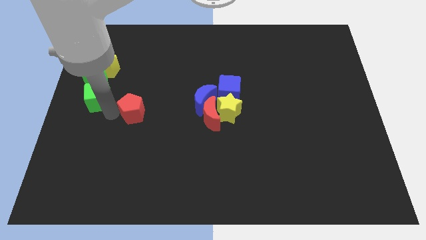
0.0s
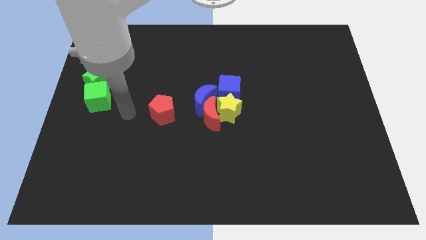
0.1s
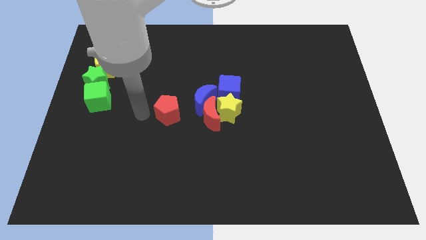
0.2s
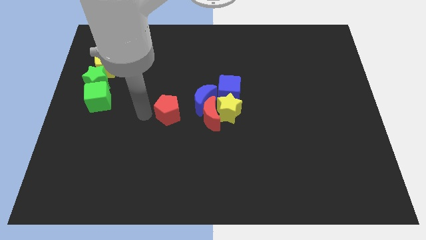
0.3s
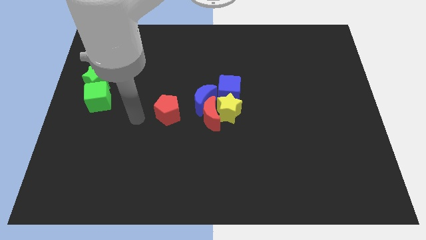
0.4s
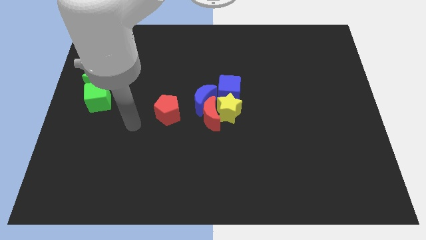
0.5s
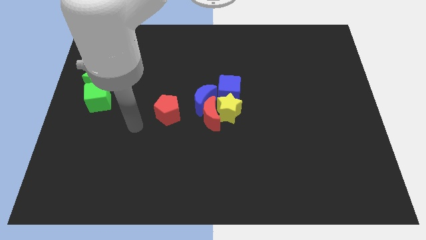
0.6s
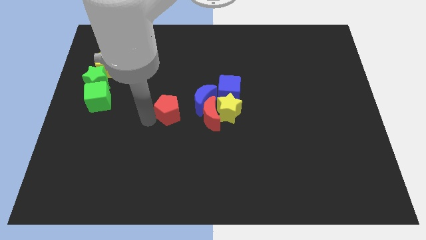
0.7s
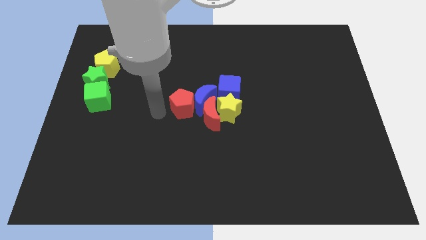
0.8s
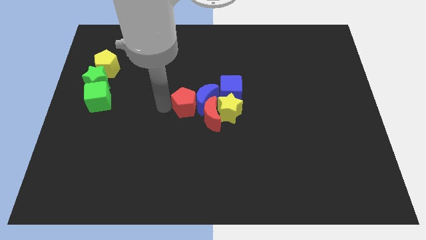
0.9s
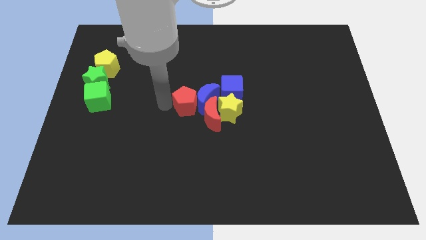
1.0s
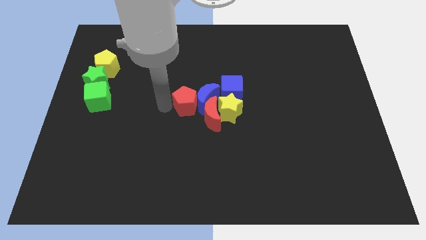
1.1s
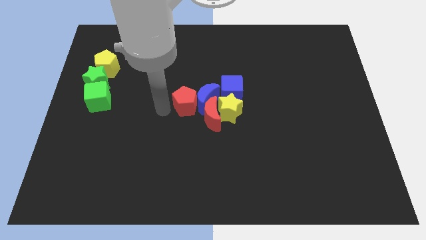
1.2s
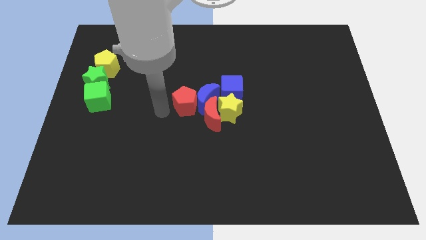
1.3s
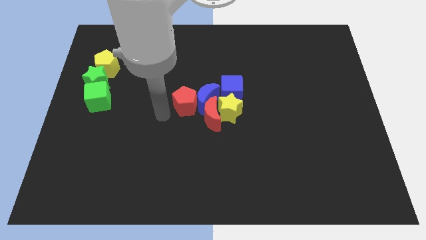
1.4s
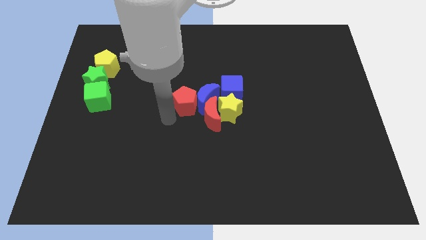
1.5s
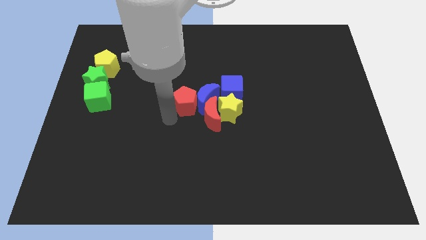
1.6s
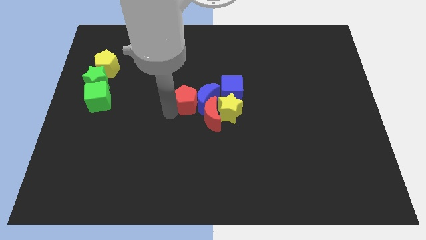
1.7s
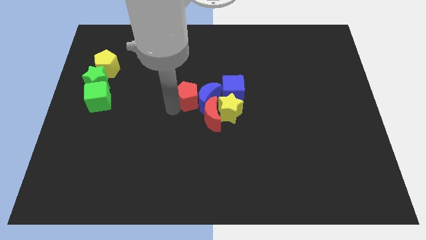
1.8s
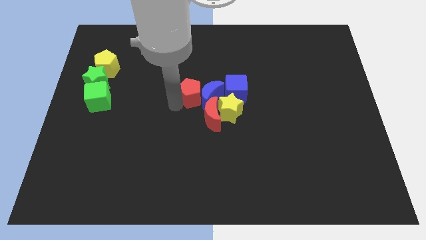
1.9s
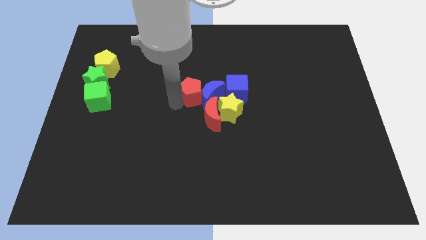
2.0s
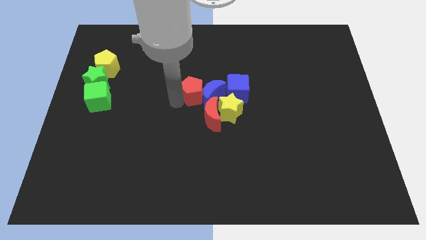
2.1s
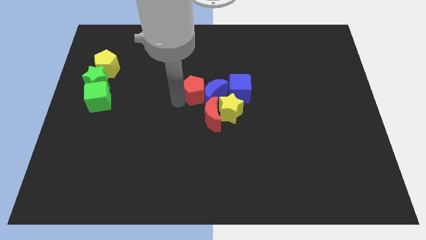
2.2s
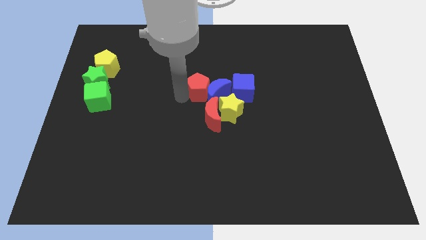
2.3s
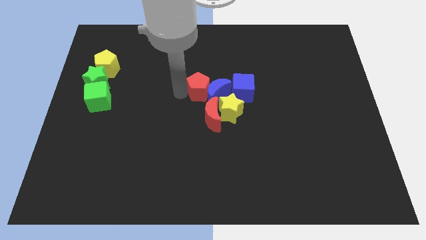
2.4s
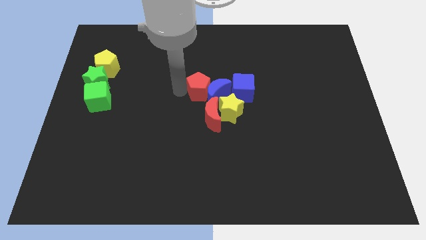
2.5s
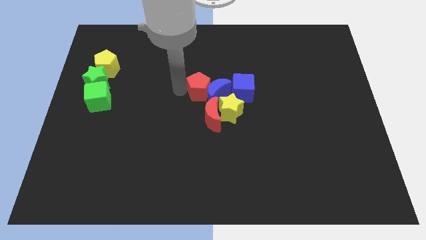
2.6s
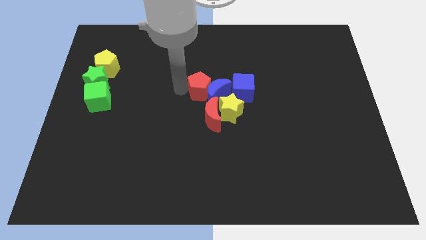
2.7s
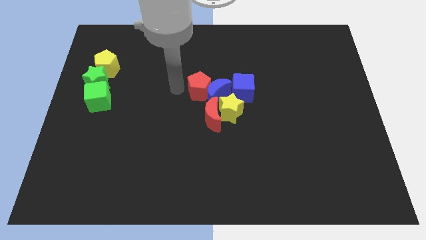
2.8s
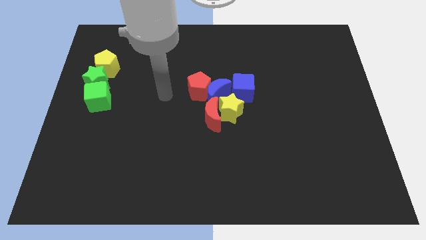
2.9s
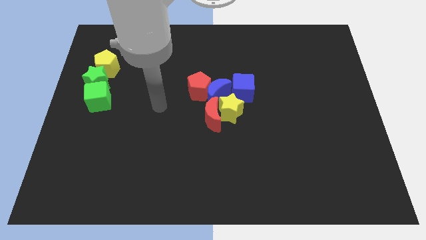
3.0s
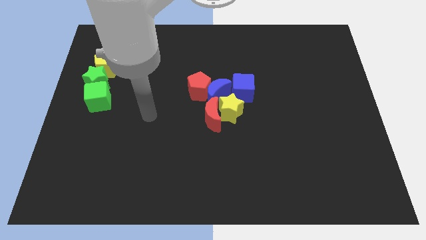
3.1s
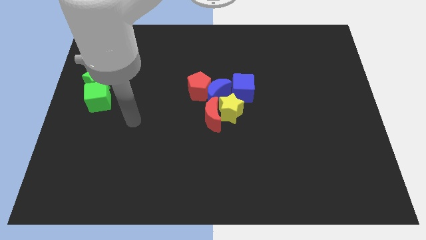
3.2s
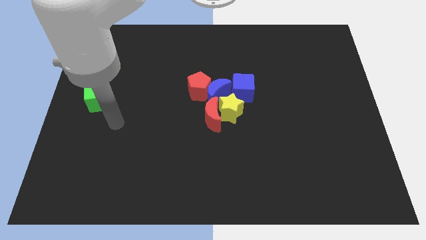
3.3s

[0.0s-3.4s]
slide the red pentagon into the blue moon

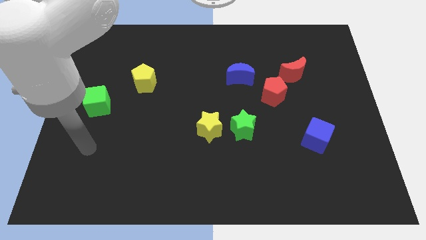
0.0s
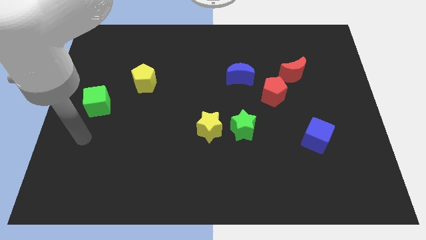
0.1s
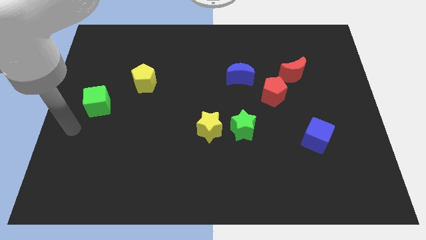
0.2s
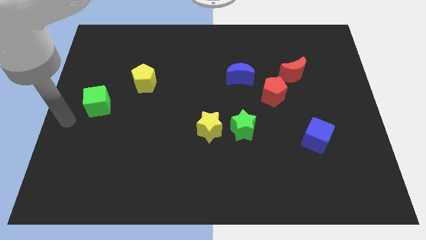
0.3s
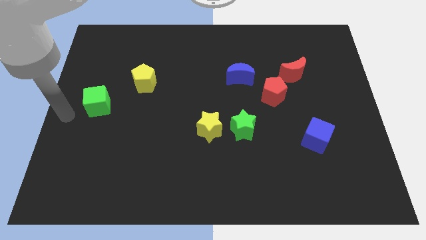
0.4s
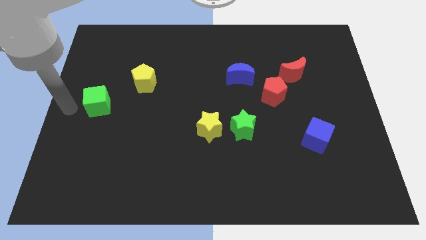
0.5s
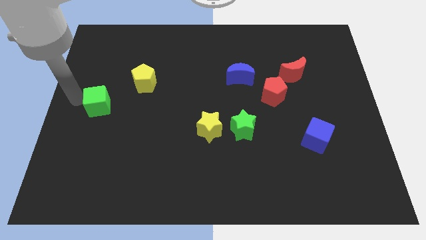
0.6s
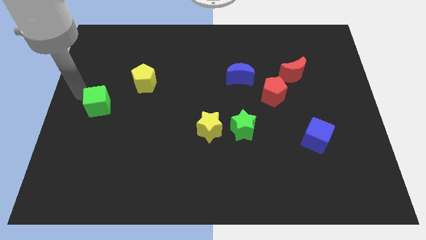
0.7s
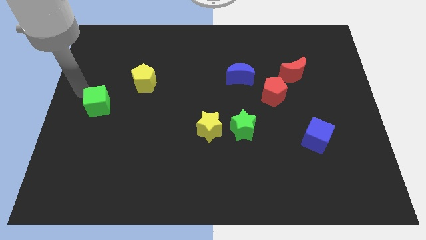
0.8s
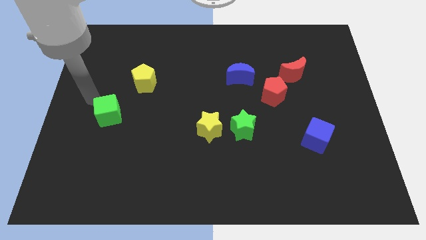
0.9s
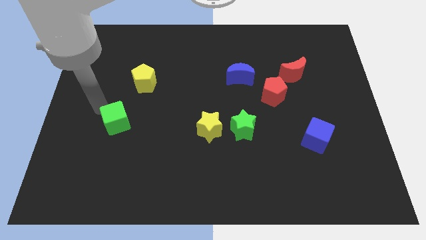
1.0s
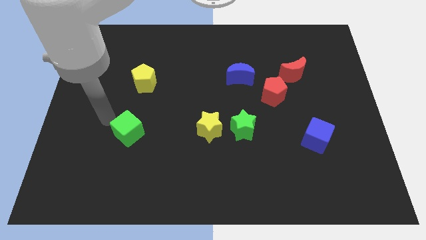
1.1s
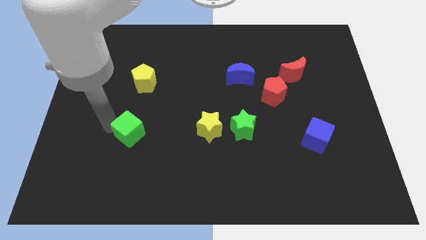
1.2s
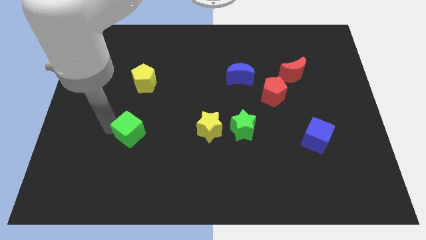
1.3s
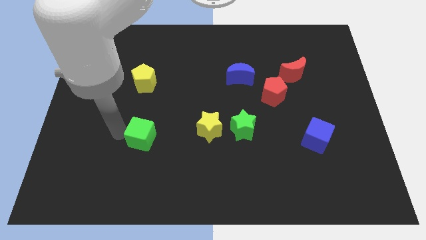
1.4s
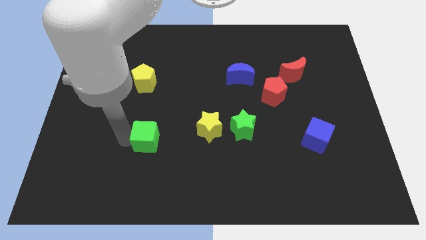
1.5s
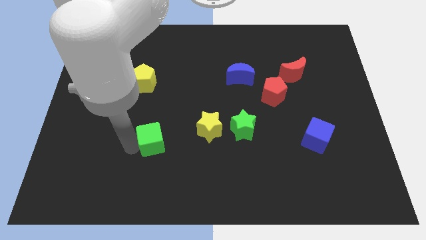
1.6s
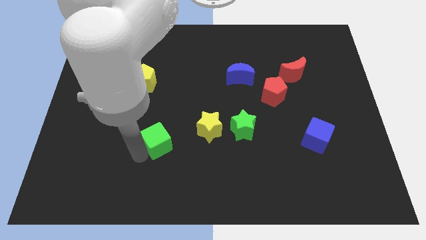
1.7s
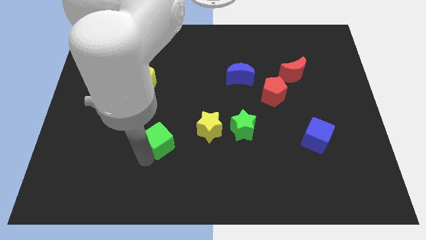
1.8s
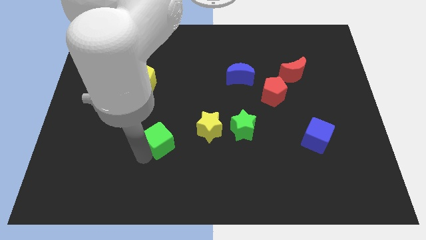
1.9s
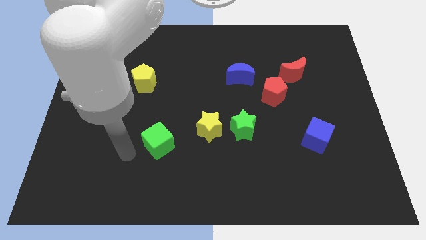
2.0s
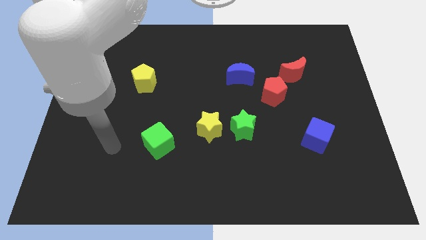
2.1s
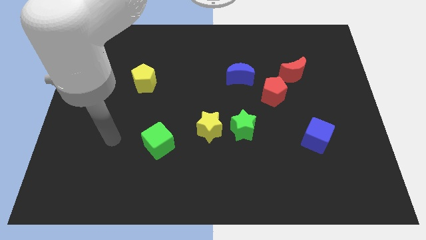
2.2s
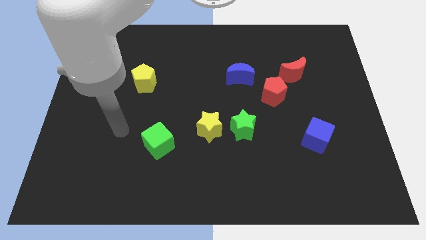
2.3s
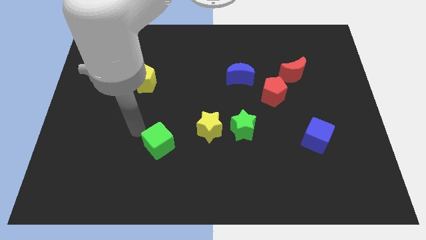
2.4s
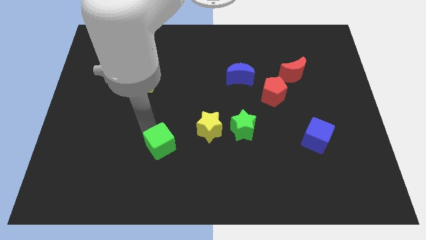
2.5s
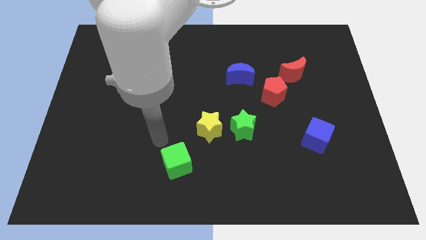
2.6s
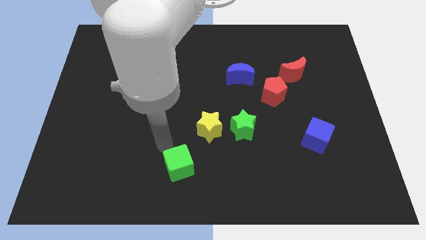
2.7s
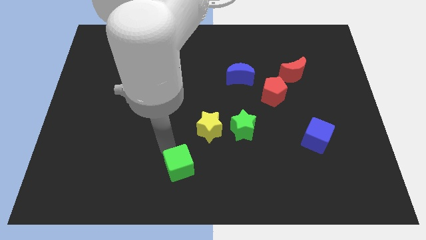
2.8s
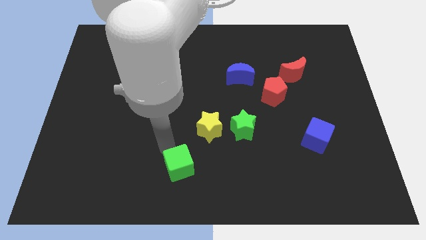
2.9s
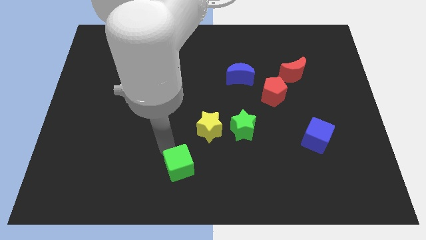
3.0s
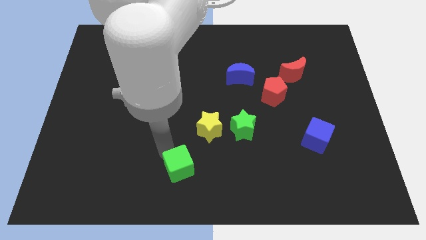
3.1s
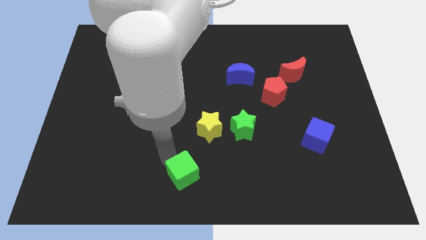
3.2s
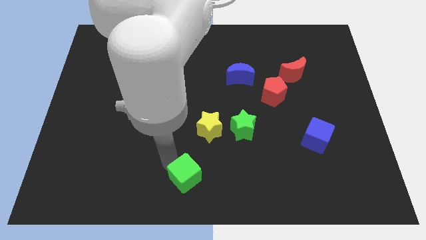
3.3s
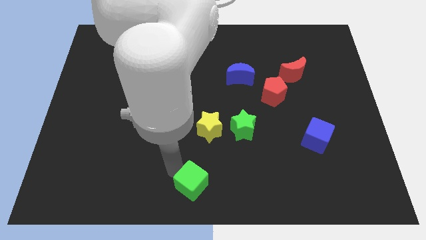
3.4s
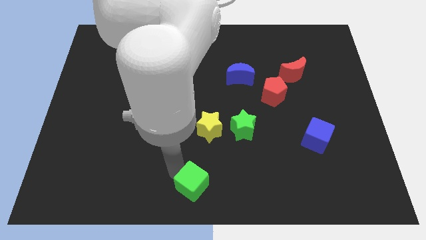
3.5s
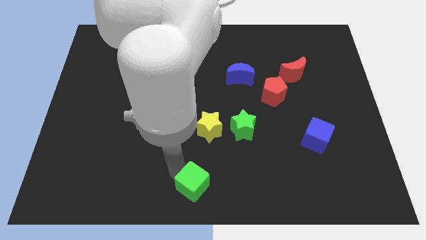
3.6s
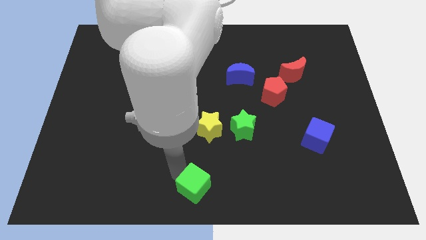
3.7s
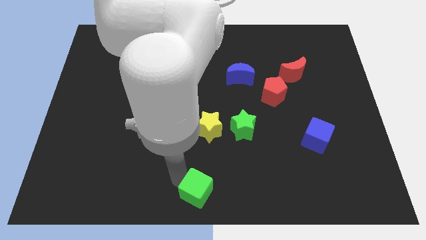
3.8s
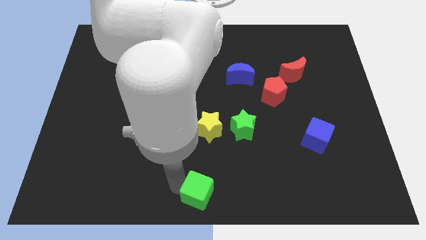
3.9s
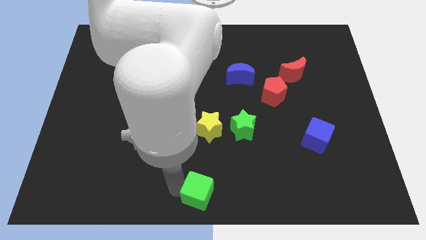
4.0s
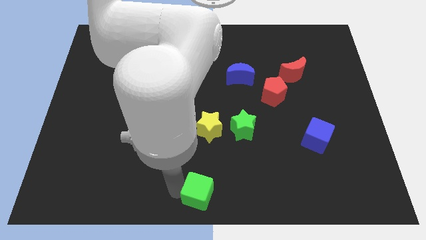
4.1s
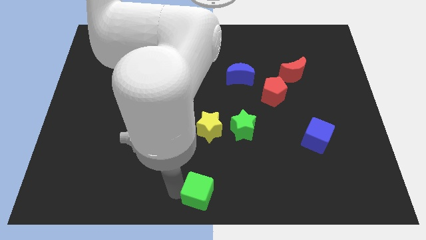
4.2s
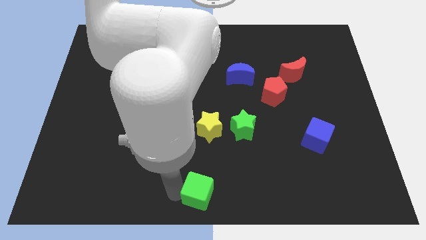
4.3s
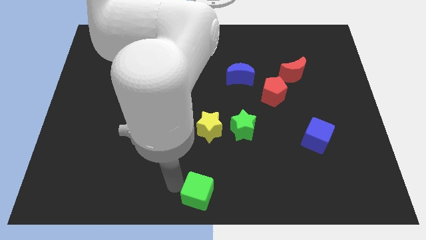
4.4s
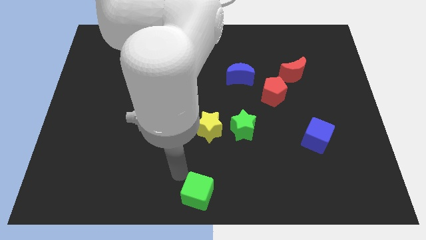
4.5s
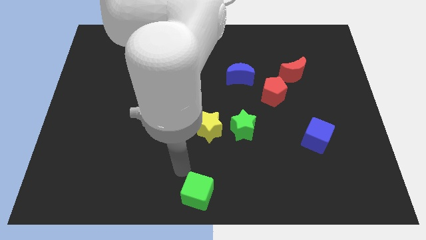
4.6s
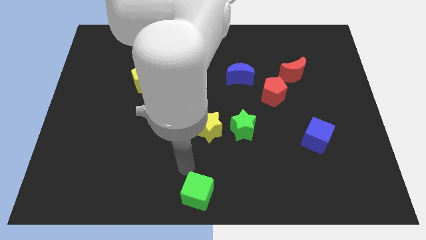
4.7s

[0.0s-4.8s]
move green cube to the center bottom

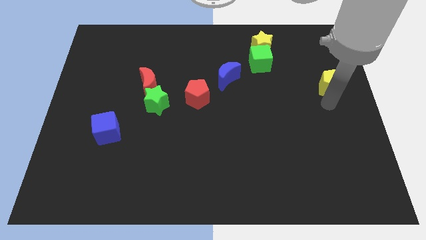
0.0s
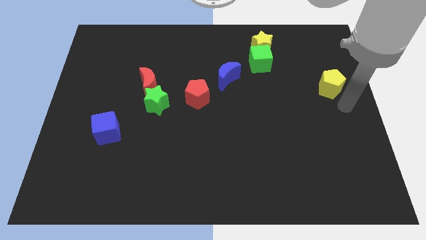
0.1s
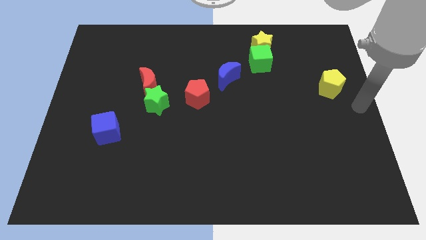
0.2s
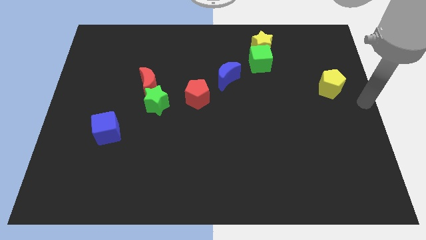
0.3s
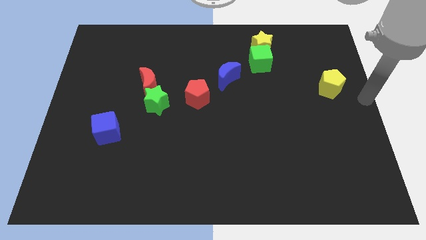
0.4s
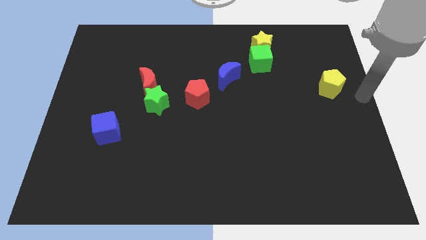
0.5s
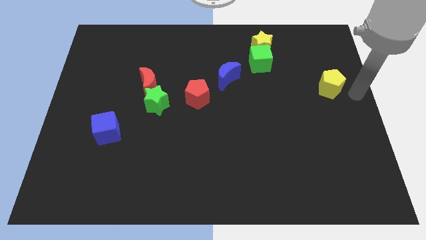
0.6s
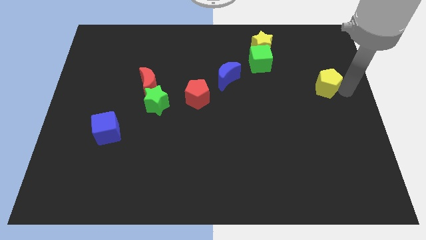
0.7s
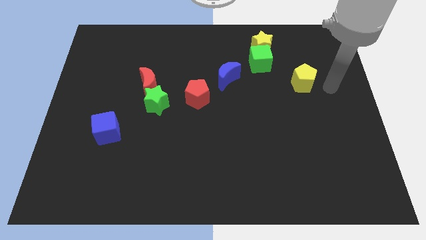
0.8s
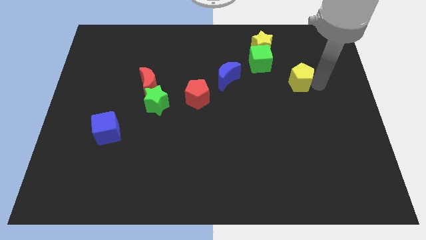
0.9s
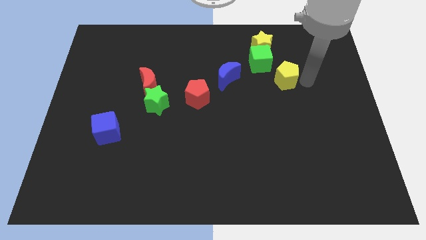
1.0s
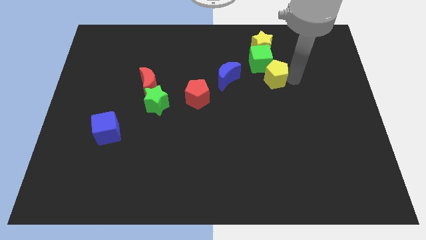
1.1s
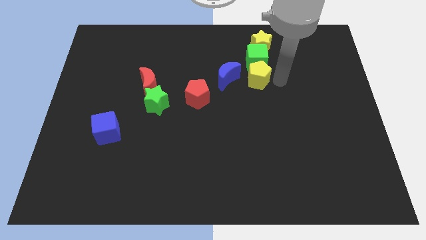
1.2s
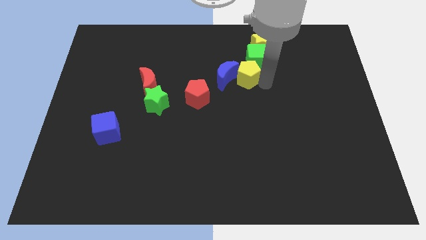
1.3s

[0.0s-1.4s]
put the yellow pentagon at the bottom of green cube
